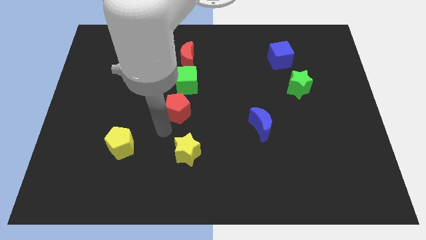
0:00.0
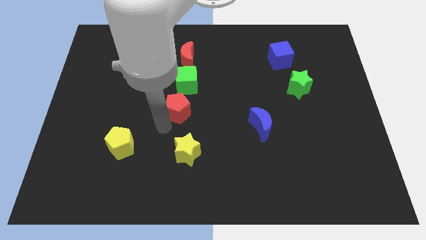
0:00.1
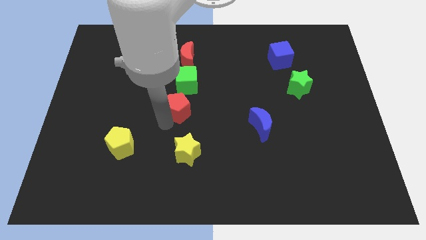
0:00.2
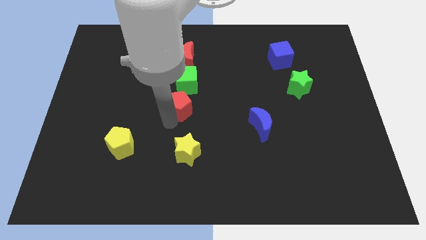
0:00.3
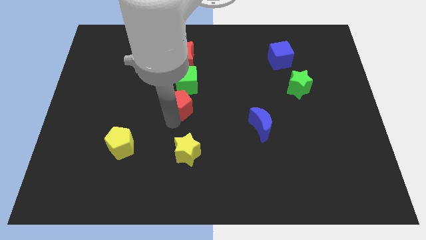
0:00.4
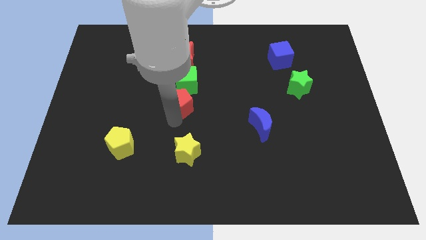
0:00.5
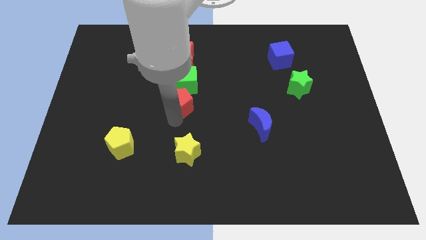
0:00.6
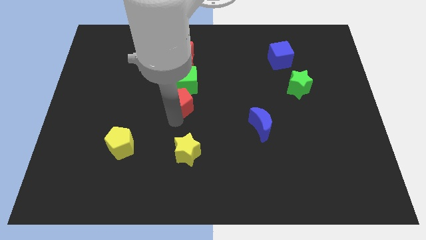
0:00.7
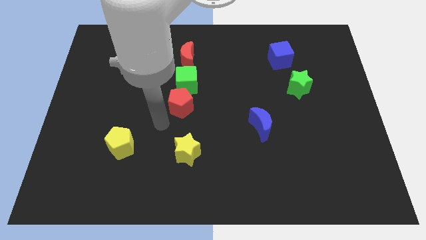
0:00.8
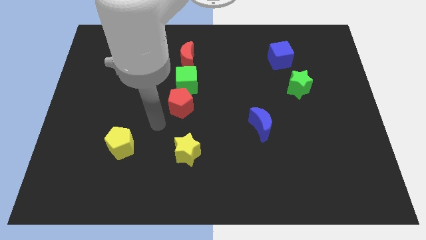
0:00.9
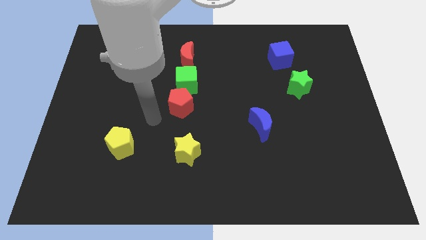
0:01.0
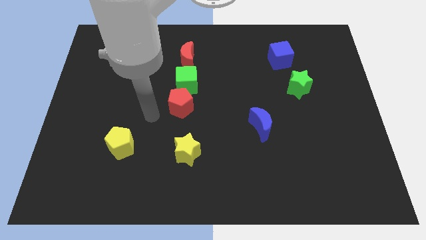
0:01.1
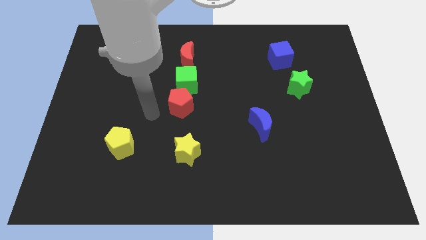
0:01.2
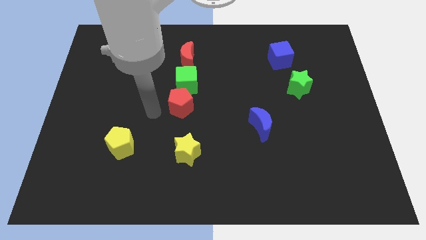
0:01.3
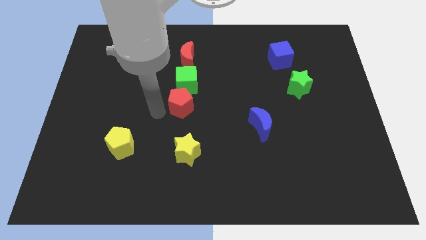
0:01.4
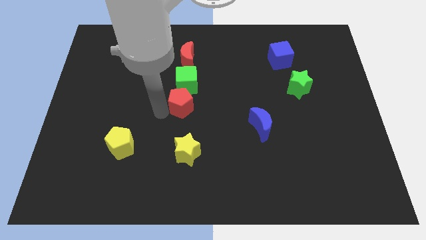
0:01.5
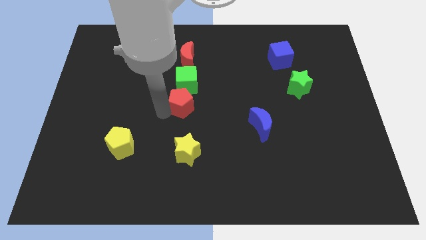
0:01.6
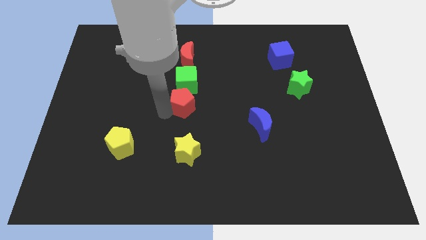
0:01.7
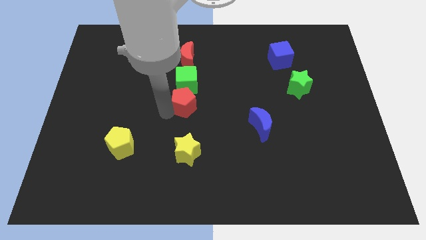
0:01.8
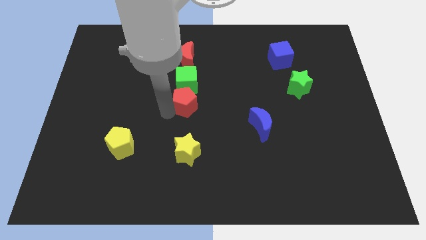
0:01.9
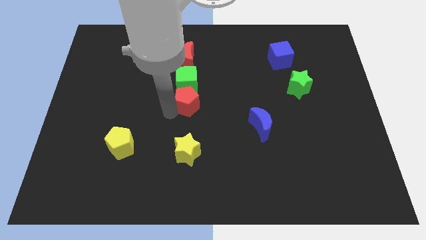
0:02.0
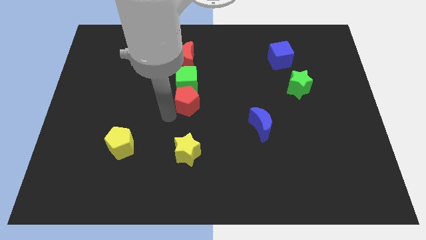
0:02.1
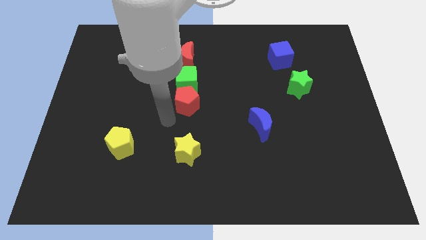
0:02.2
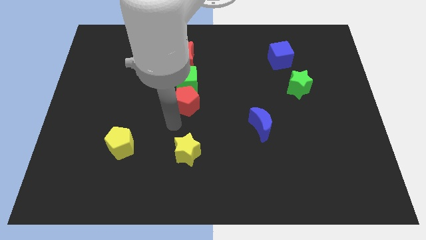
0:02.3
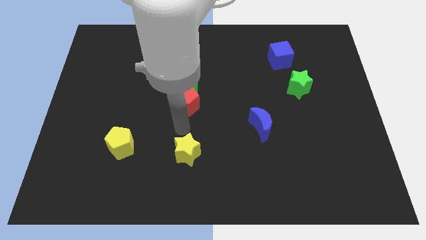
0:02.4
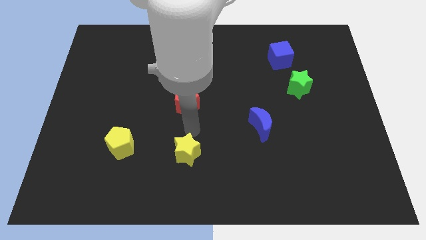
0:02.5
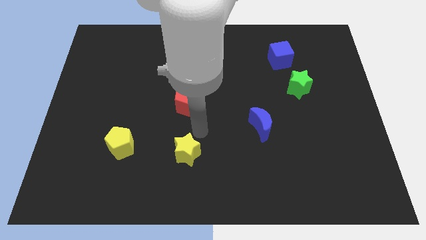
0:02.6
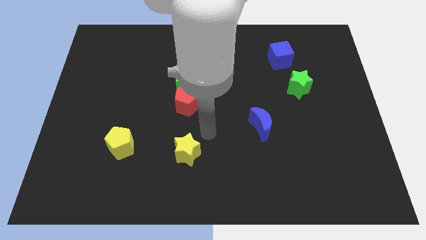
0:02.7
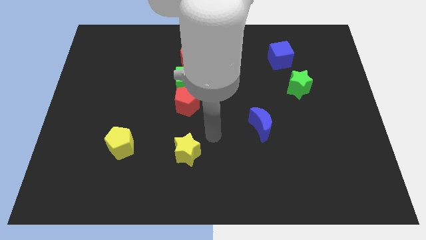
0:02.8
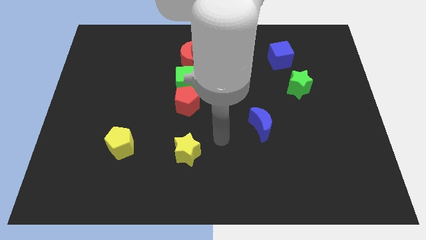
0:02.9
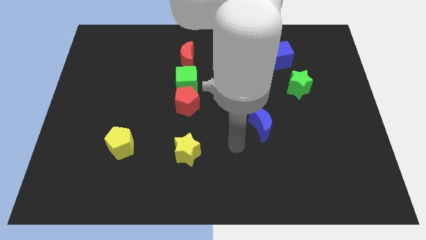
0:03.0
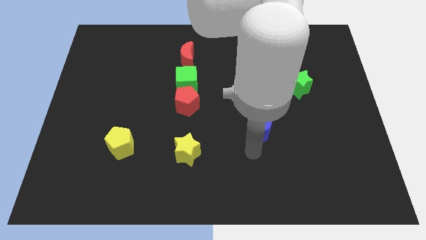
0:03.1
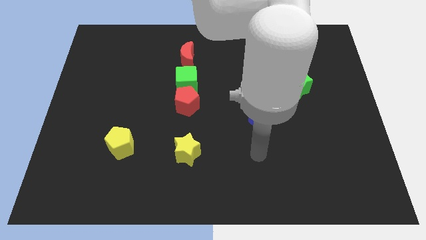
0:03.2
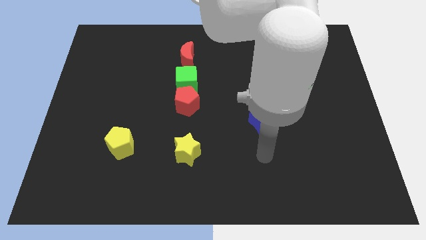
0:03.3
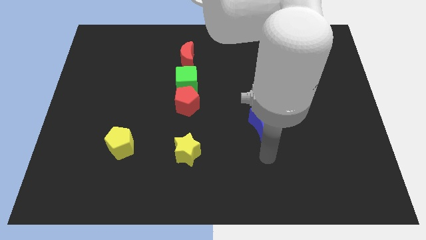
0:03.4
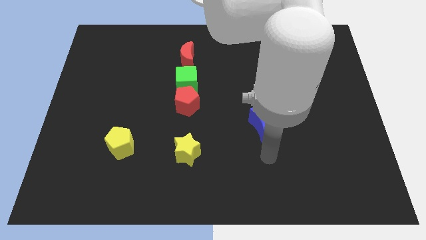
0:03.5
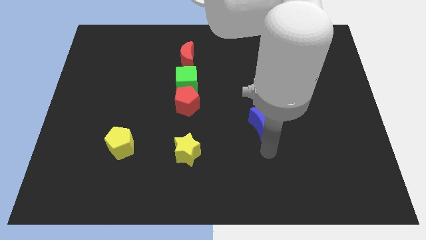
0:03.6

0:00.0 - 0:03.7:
place the red pentagon towards the bottom of the green cube

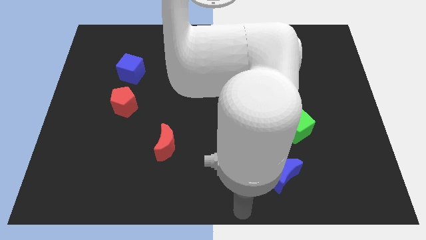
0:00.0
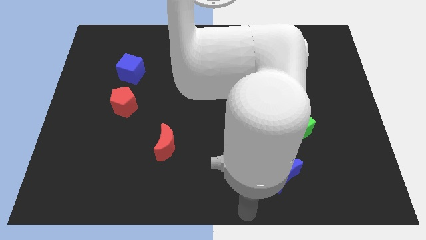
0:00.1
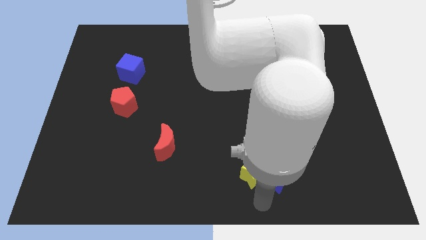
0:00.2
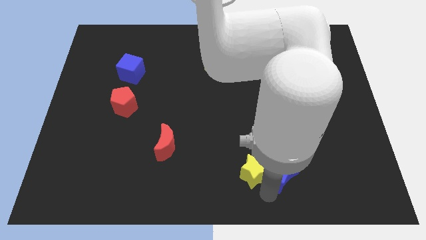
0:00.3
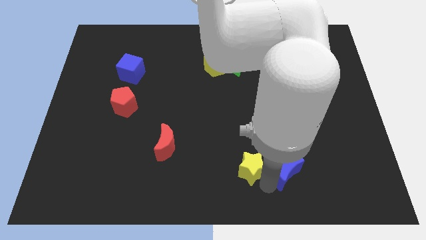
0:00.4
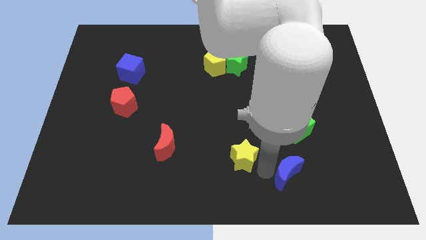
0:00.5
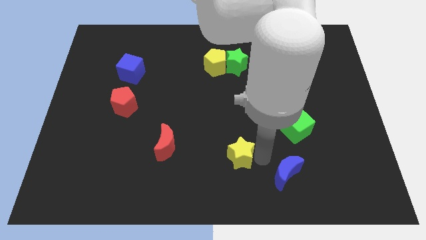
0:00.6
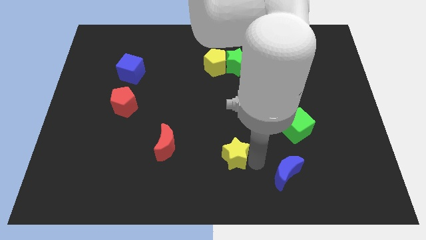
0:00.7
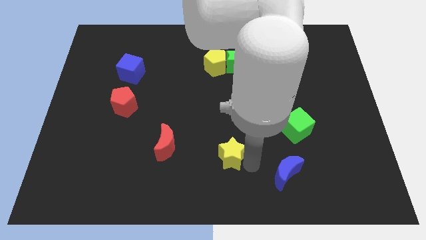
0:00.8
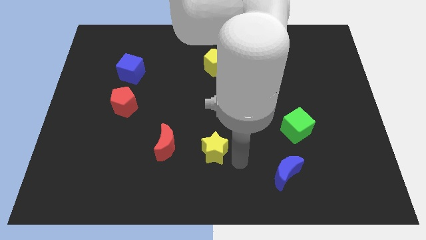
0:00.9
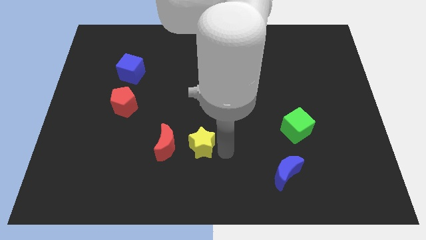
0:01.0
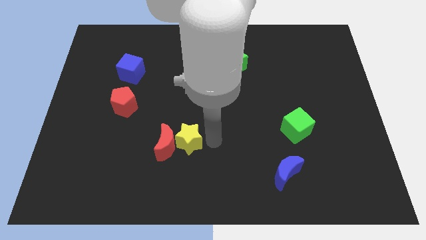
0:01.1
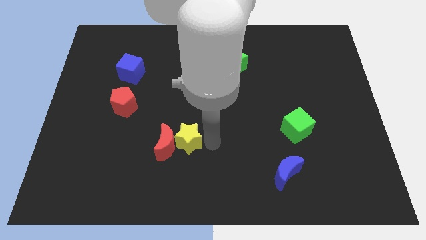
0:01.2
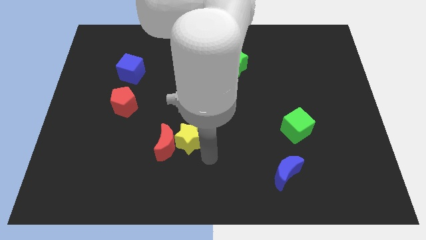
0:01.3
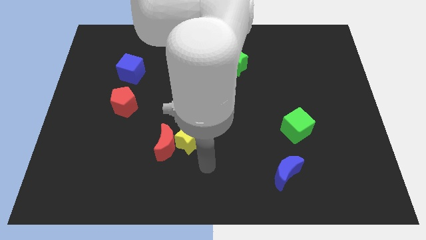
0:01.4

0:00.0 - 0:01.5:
move the yellow star to the right side of the red moon

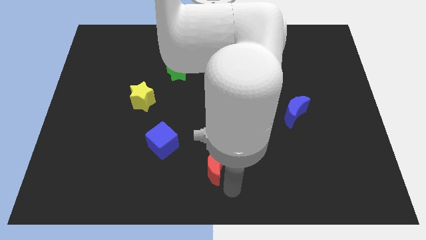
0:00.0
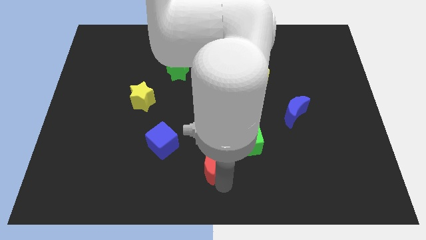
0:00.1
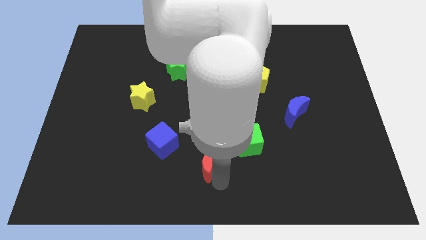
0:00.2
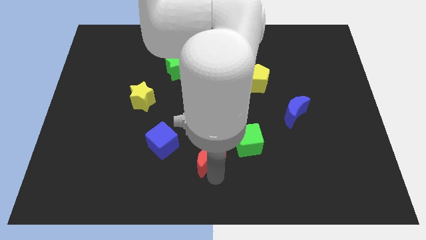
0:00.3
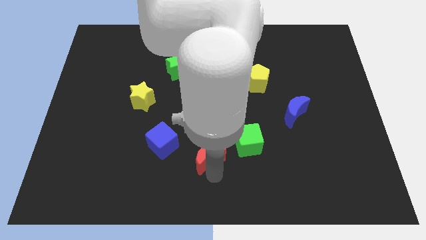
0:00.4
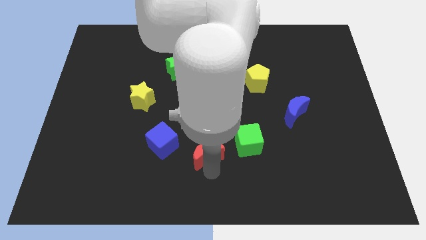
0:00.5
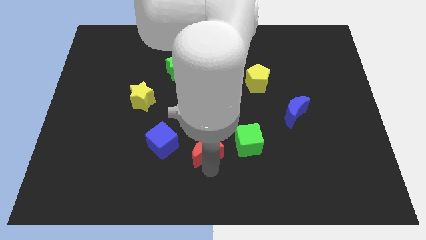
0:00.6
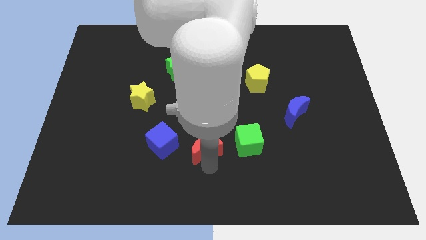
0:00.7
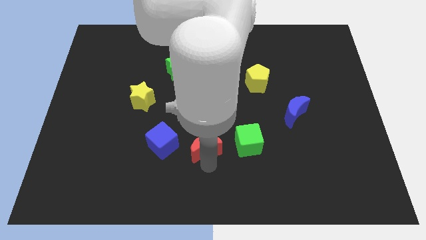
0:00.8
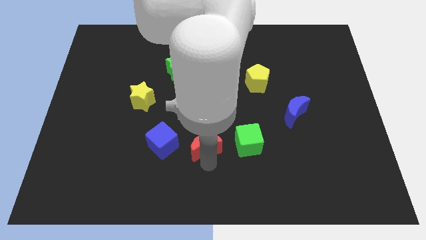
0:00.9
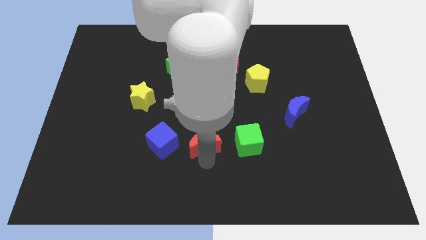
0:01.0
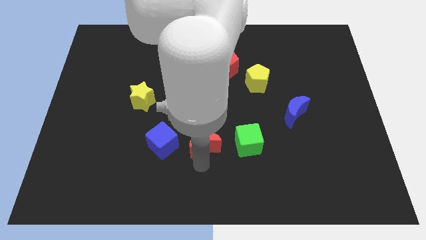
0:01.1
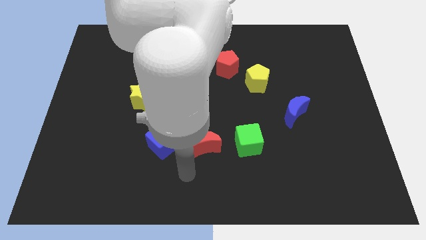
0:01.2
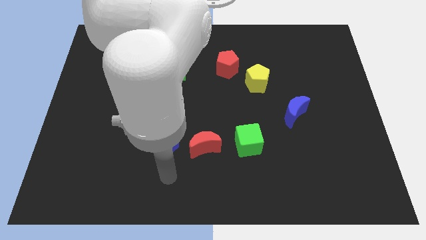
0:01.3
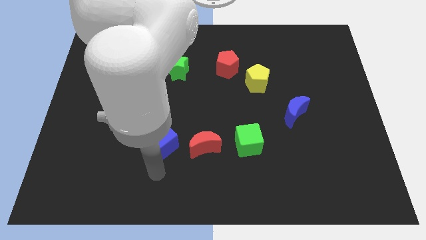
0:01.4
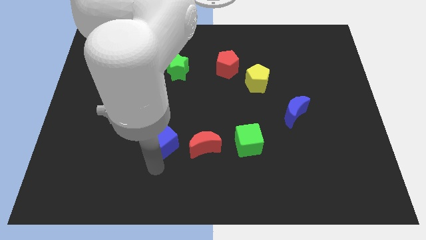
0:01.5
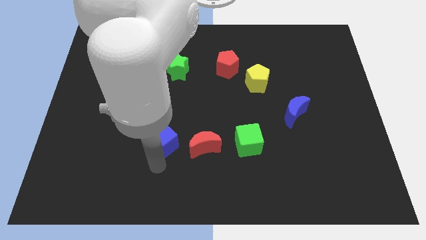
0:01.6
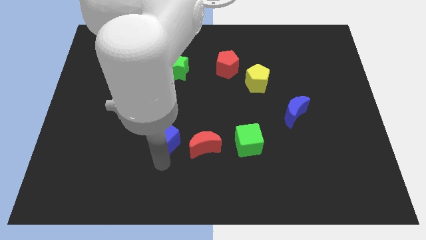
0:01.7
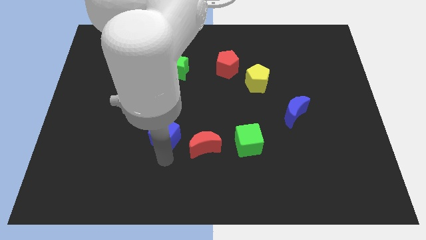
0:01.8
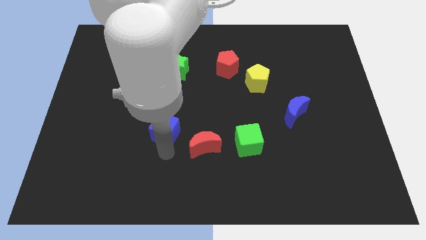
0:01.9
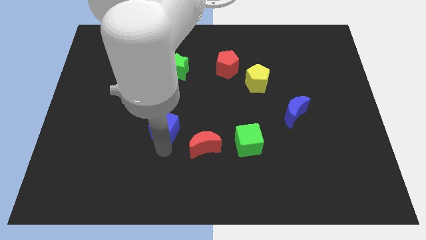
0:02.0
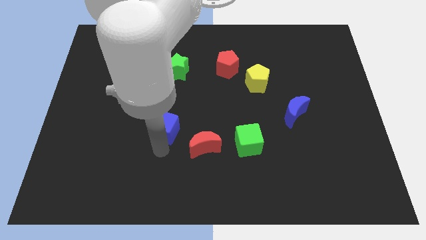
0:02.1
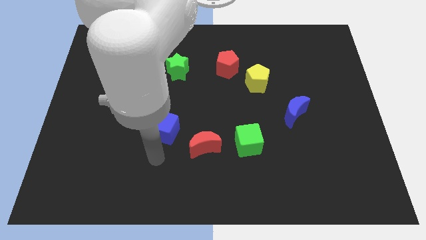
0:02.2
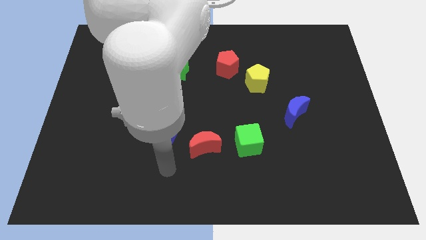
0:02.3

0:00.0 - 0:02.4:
push the red crescent and the blue cube slightly upwards

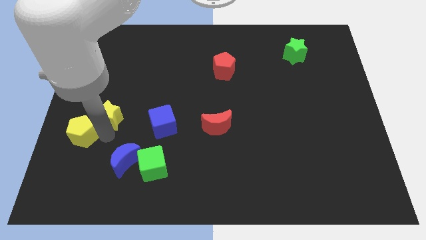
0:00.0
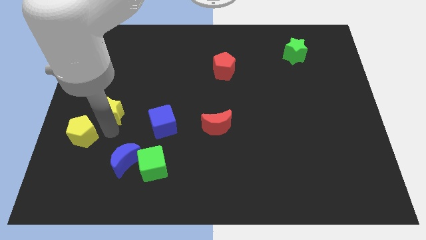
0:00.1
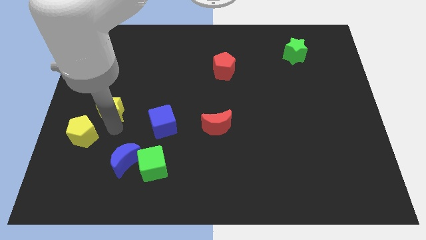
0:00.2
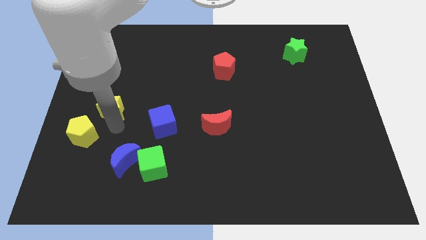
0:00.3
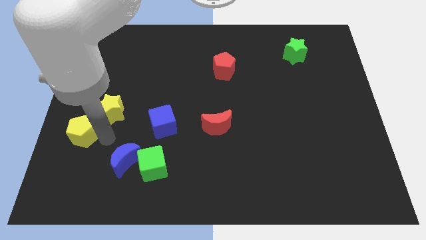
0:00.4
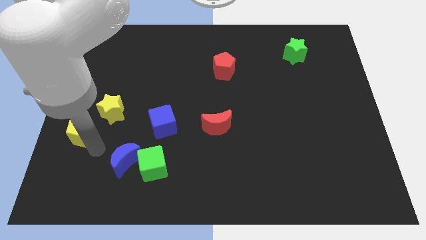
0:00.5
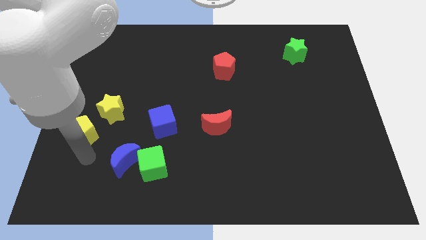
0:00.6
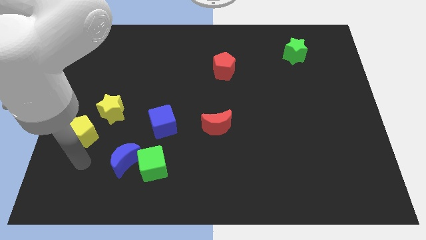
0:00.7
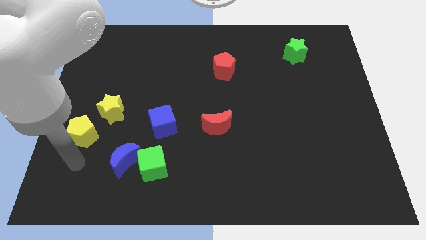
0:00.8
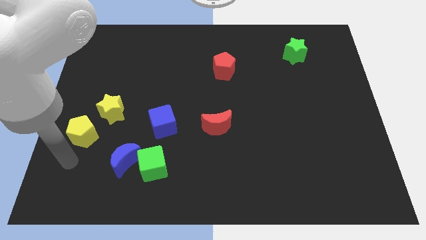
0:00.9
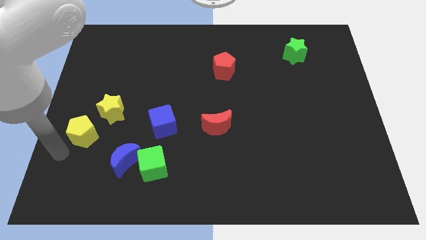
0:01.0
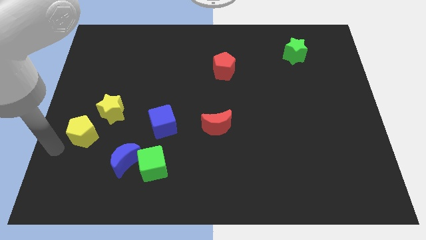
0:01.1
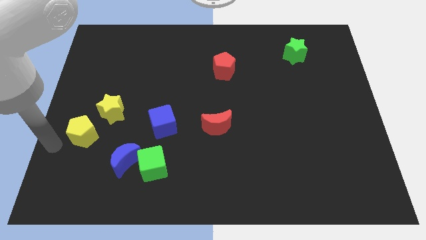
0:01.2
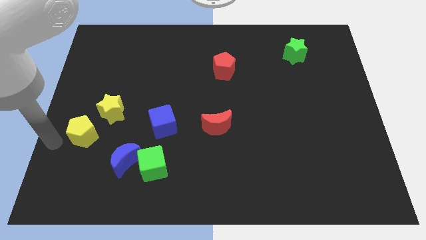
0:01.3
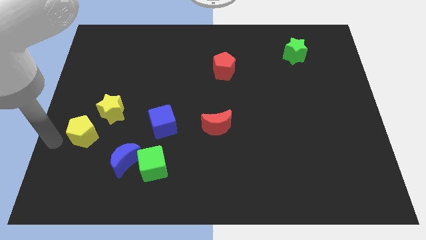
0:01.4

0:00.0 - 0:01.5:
touch the bottom of yellow star

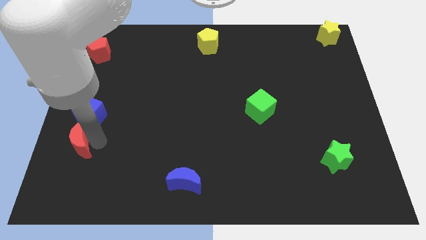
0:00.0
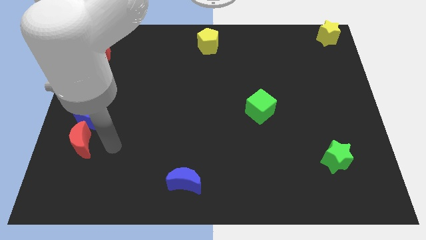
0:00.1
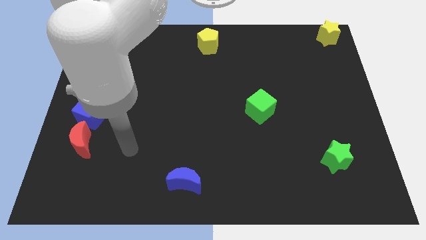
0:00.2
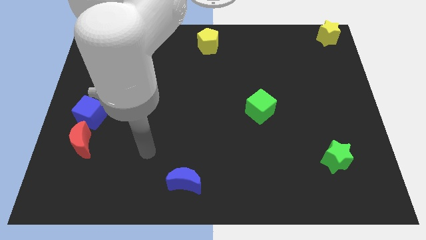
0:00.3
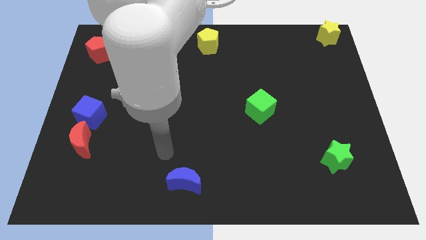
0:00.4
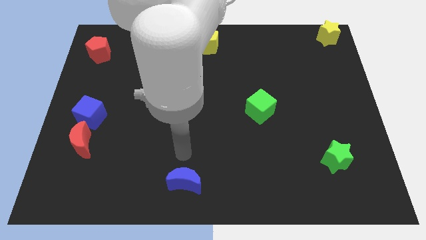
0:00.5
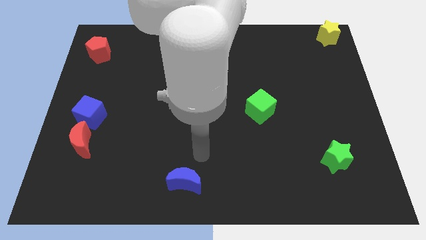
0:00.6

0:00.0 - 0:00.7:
point your arm above blue moon
